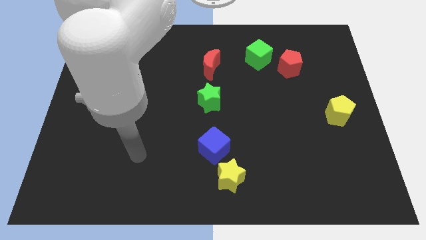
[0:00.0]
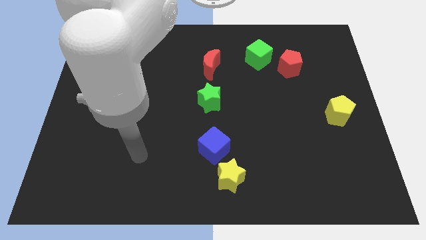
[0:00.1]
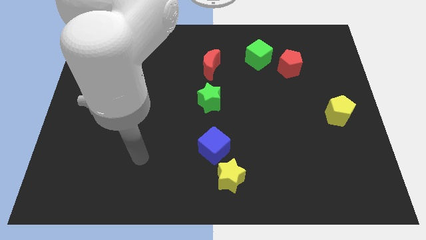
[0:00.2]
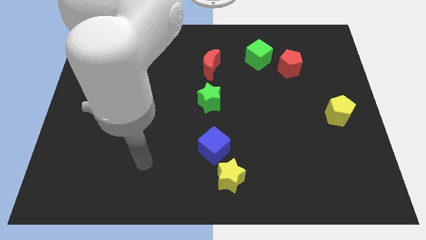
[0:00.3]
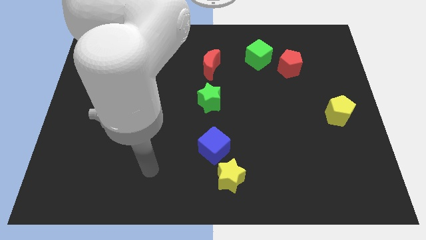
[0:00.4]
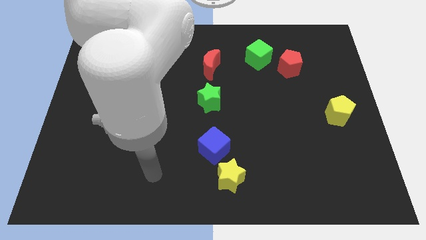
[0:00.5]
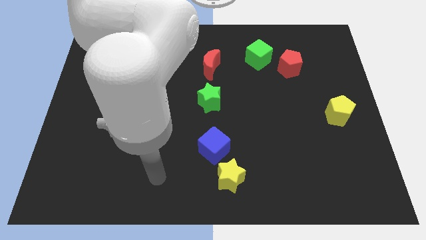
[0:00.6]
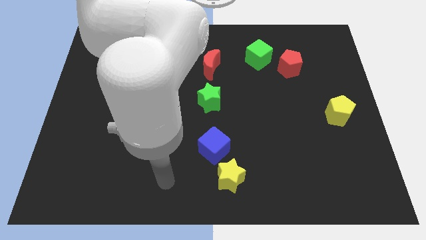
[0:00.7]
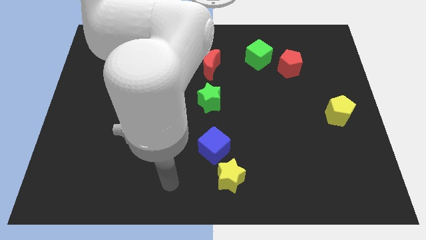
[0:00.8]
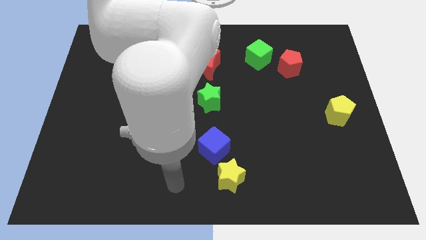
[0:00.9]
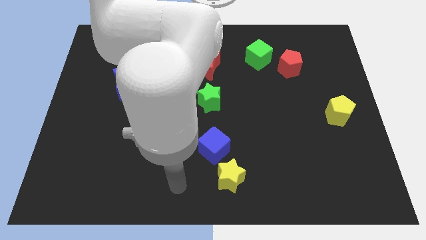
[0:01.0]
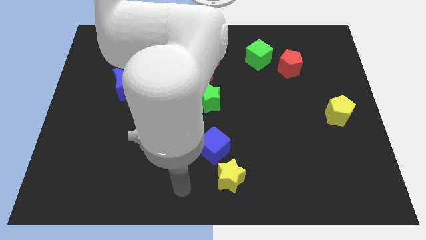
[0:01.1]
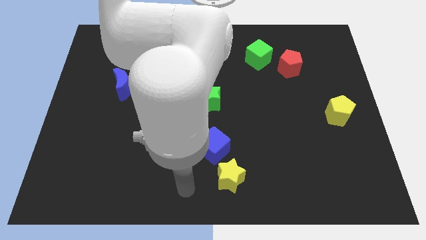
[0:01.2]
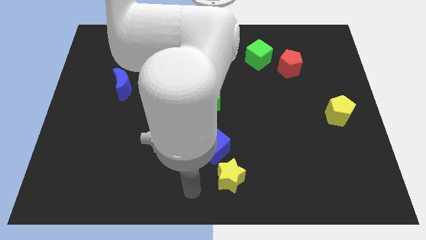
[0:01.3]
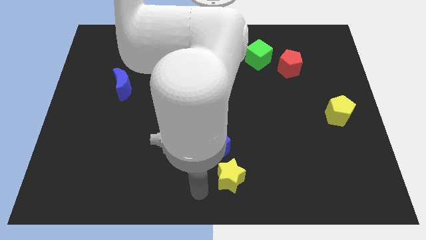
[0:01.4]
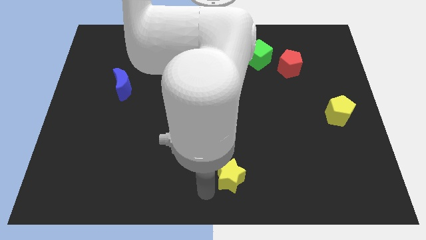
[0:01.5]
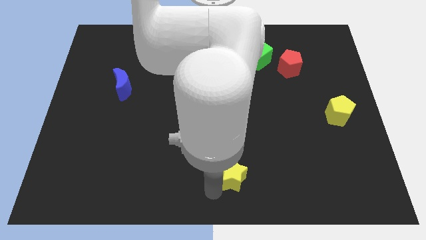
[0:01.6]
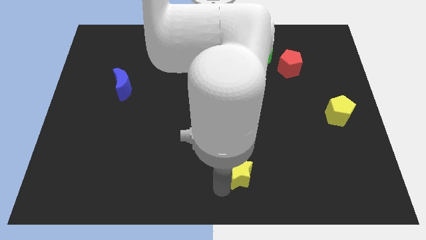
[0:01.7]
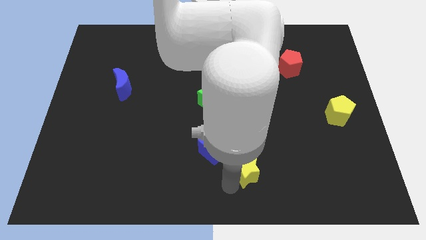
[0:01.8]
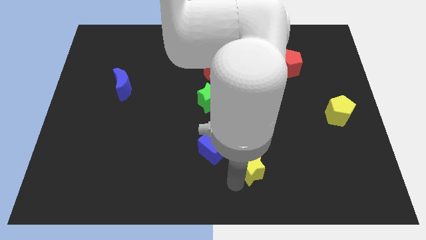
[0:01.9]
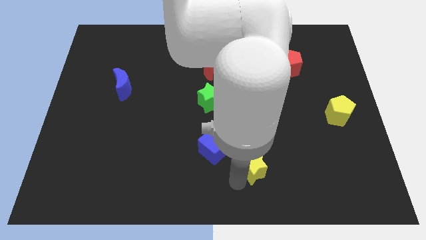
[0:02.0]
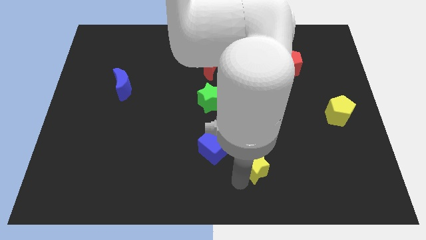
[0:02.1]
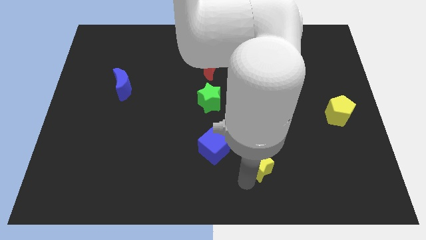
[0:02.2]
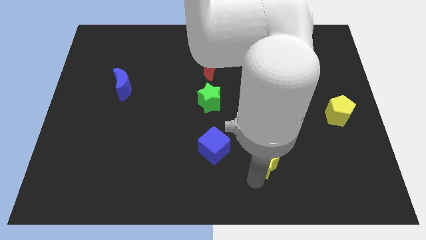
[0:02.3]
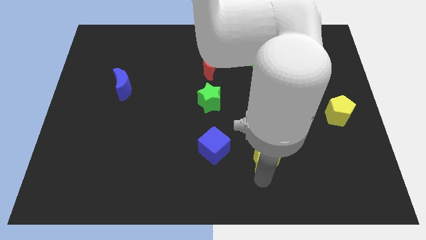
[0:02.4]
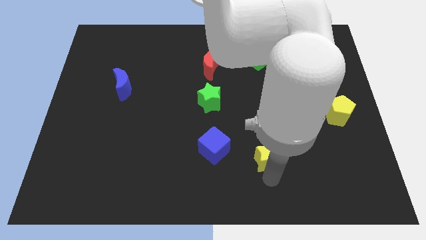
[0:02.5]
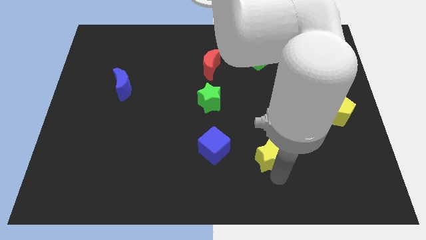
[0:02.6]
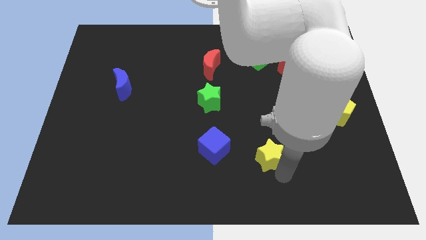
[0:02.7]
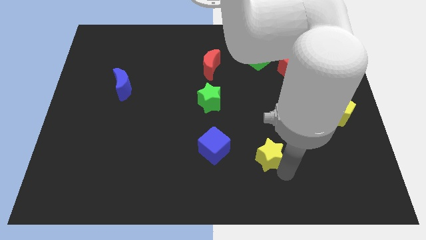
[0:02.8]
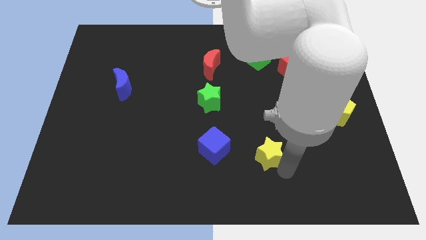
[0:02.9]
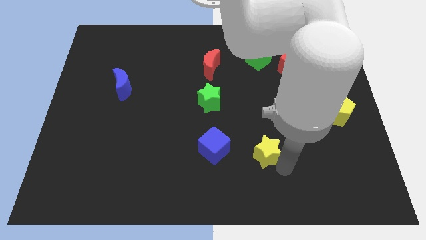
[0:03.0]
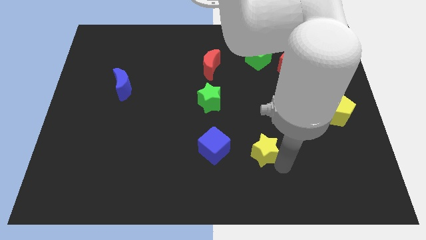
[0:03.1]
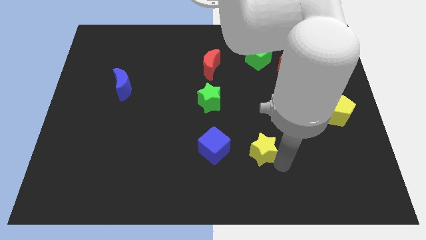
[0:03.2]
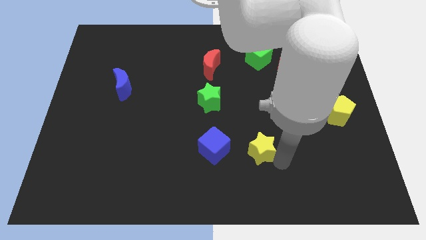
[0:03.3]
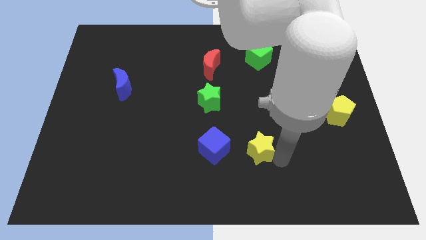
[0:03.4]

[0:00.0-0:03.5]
move the yellow star to the right side of the blue cube

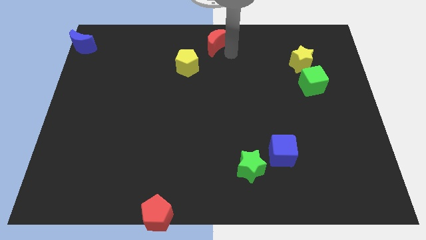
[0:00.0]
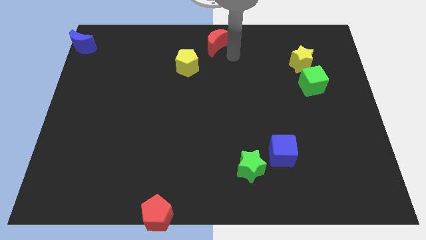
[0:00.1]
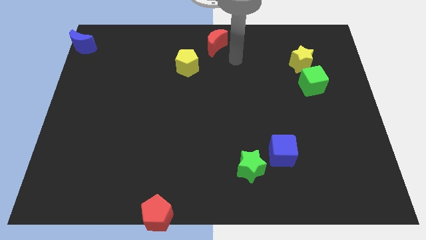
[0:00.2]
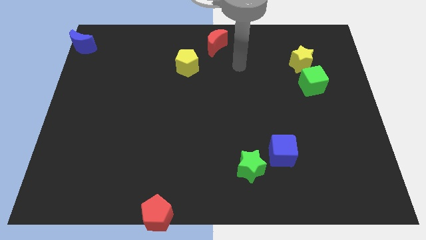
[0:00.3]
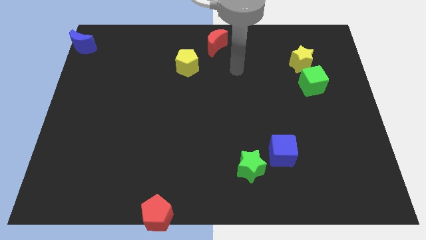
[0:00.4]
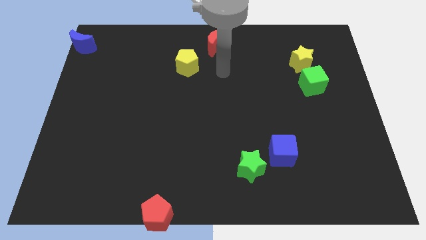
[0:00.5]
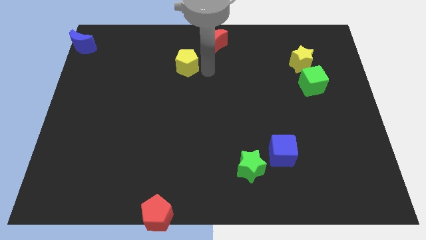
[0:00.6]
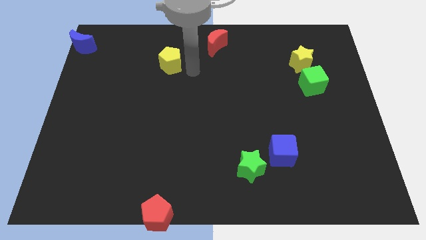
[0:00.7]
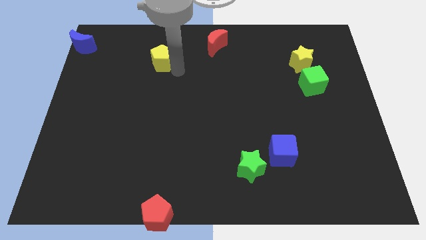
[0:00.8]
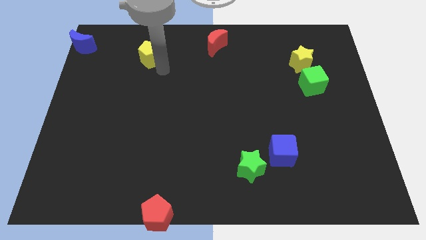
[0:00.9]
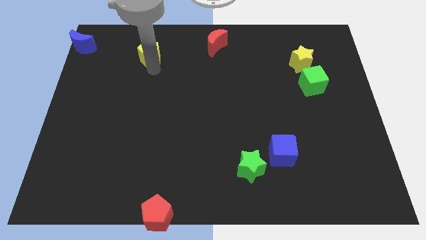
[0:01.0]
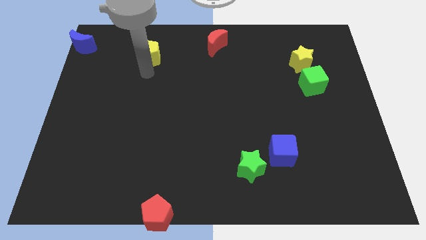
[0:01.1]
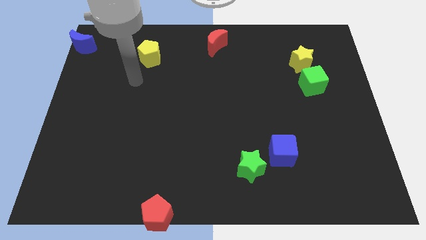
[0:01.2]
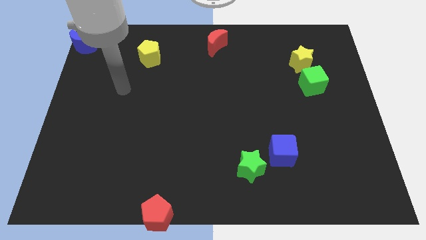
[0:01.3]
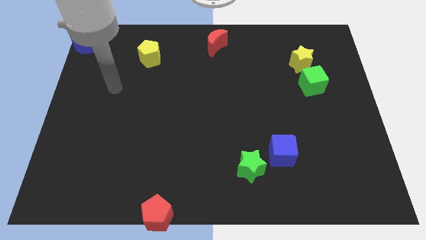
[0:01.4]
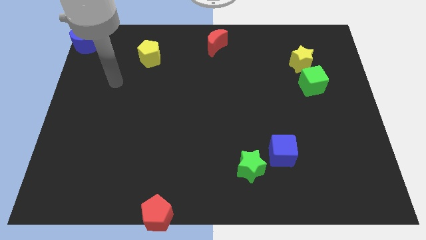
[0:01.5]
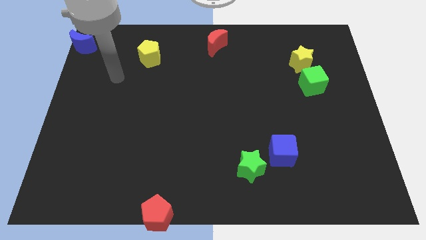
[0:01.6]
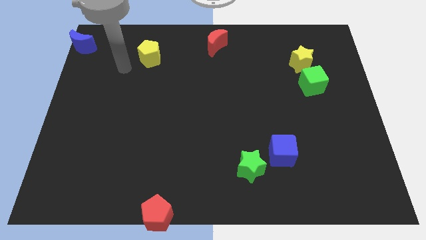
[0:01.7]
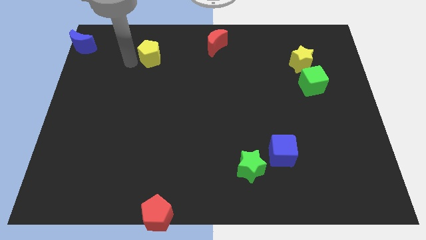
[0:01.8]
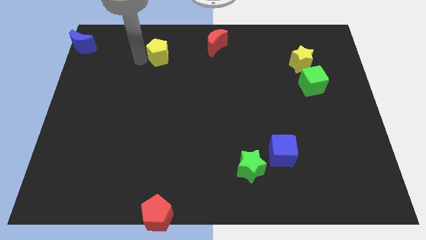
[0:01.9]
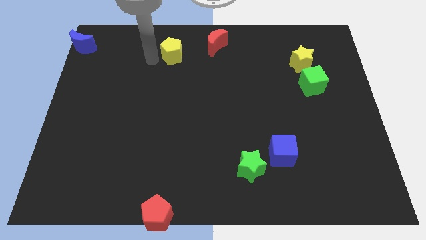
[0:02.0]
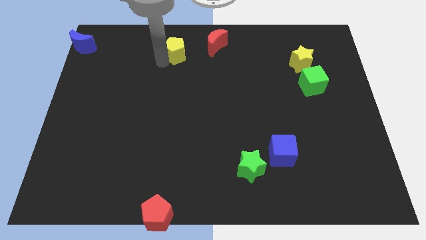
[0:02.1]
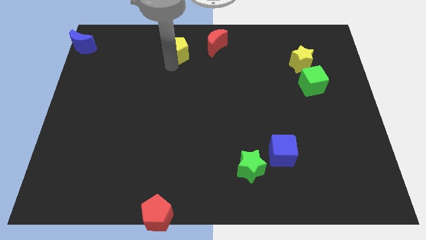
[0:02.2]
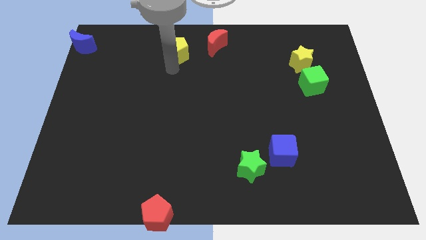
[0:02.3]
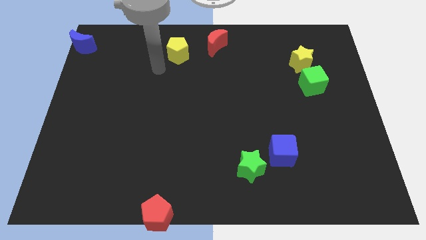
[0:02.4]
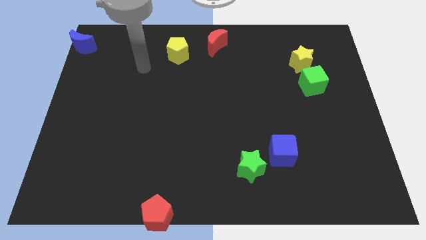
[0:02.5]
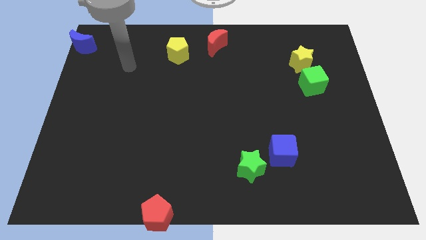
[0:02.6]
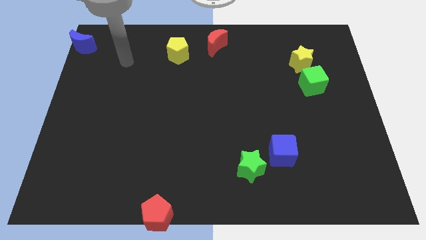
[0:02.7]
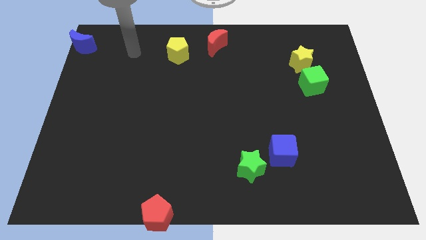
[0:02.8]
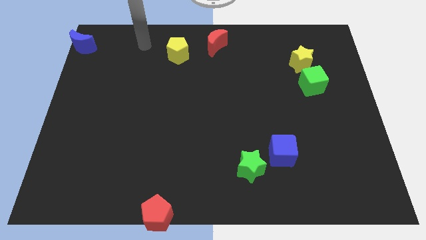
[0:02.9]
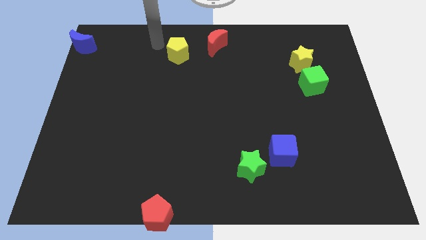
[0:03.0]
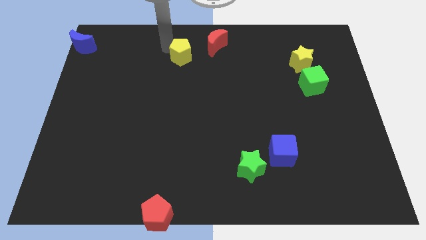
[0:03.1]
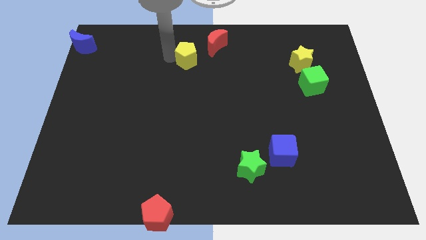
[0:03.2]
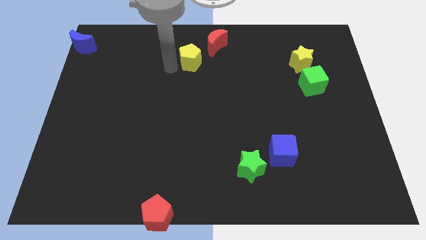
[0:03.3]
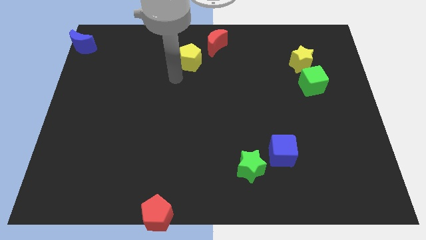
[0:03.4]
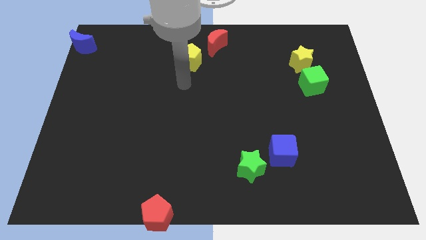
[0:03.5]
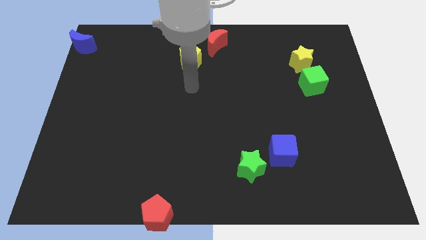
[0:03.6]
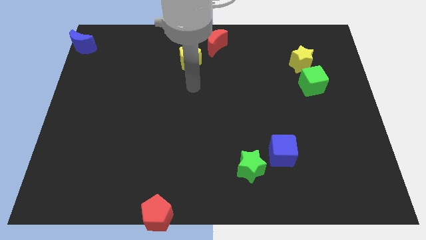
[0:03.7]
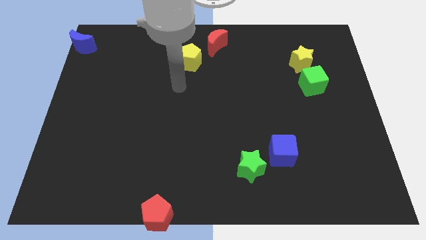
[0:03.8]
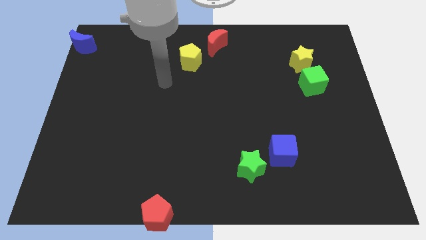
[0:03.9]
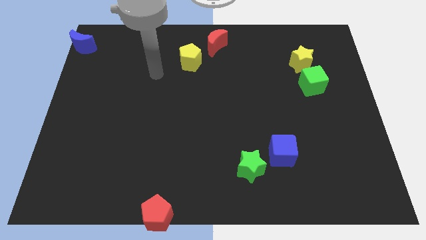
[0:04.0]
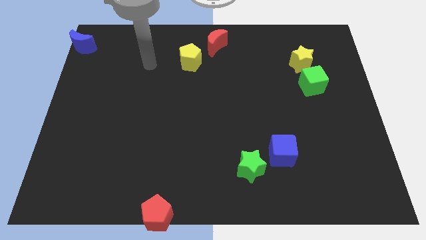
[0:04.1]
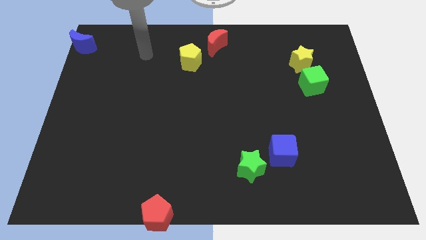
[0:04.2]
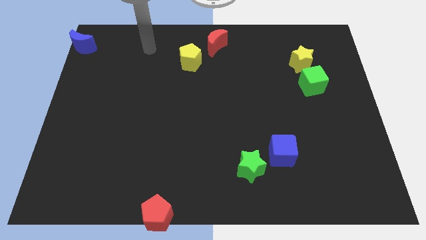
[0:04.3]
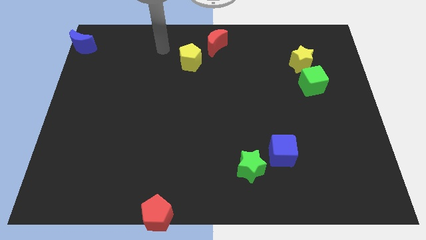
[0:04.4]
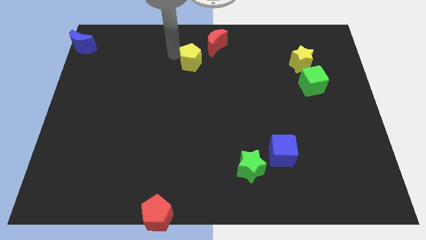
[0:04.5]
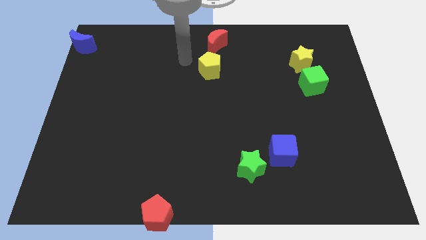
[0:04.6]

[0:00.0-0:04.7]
move the yellow pentagon below to the red crescent

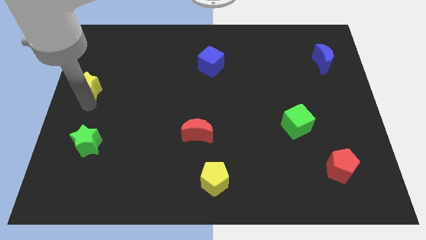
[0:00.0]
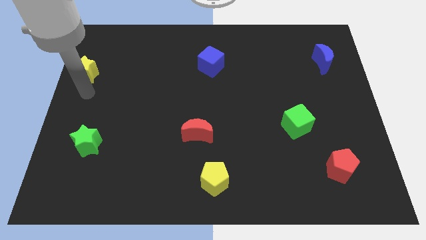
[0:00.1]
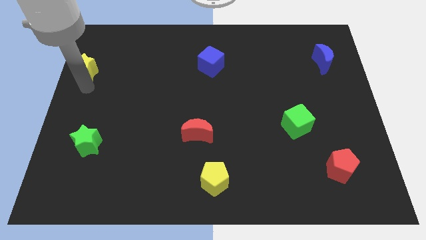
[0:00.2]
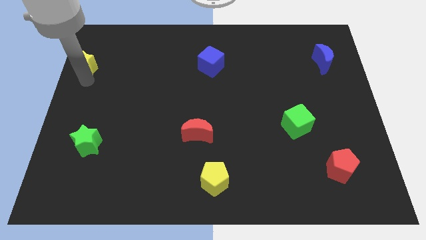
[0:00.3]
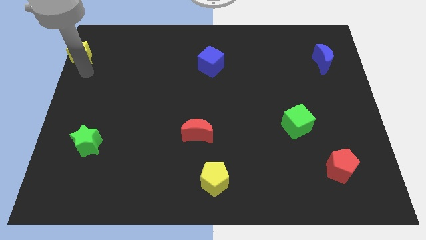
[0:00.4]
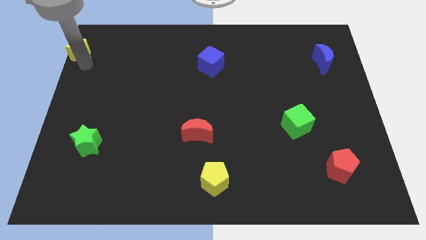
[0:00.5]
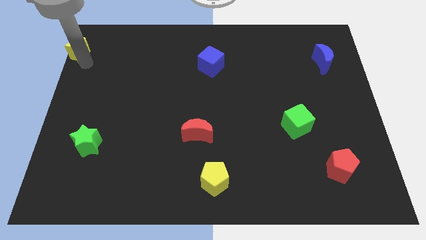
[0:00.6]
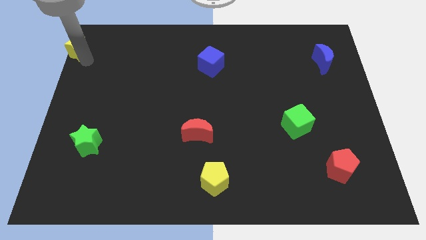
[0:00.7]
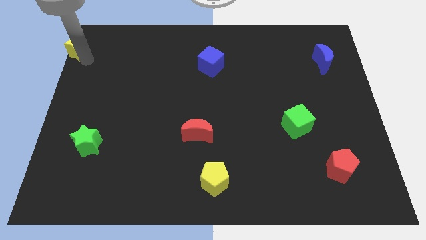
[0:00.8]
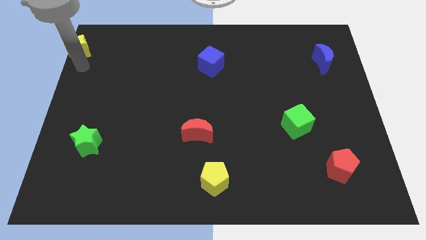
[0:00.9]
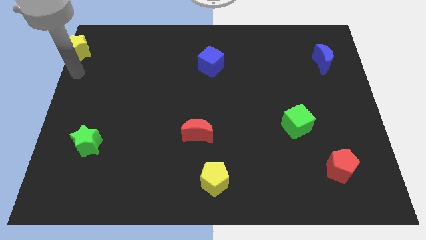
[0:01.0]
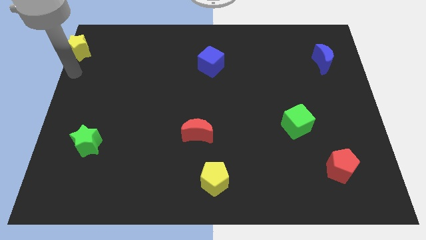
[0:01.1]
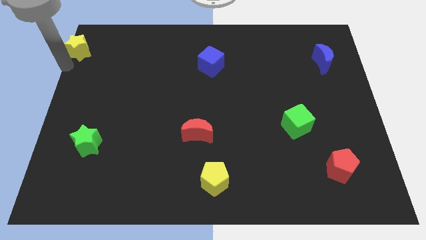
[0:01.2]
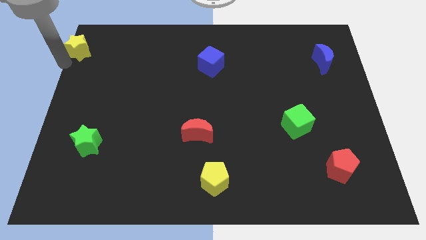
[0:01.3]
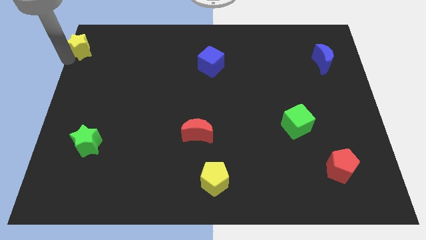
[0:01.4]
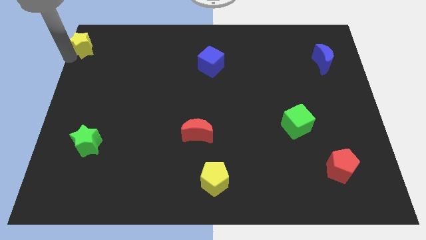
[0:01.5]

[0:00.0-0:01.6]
place yellow star towards top left corner
